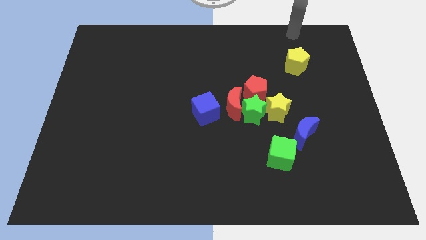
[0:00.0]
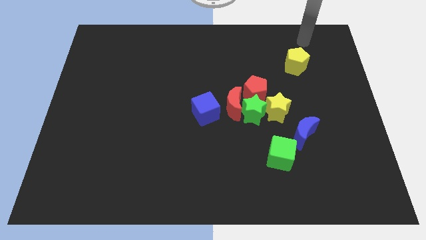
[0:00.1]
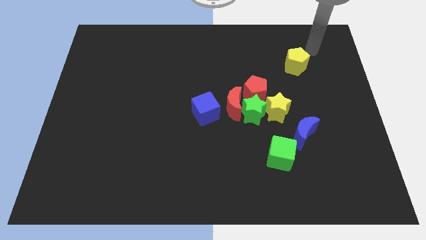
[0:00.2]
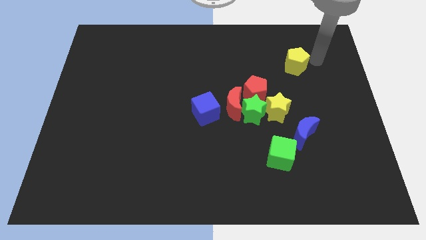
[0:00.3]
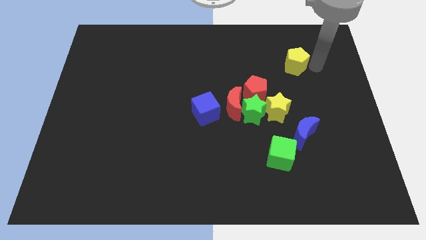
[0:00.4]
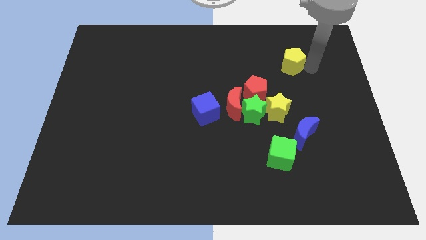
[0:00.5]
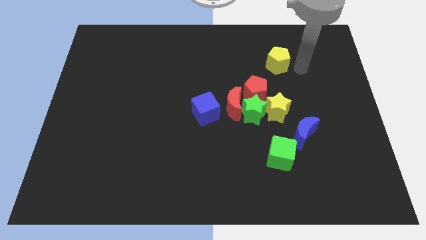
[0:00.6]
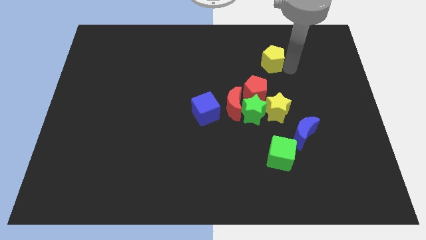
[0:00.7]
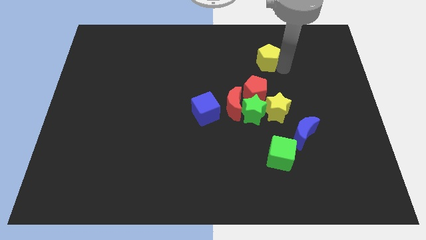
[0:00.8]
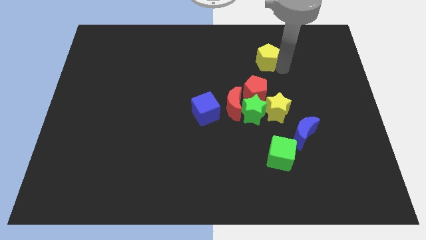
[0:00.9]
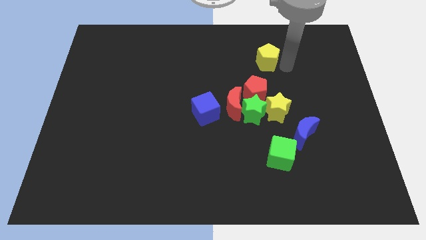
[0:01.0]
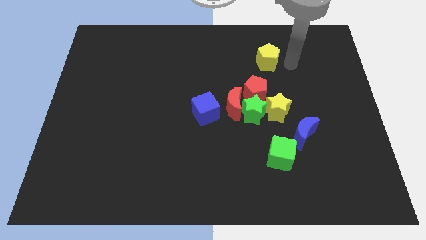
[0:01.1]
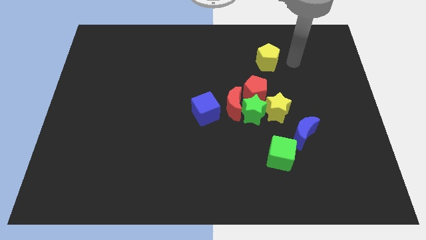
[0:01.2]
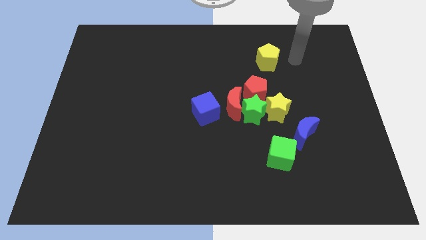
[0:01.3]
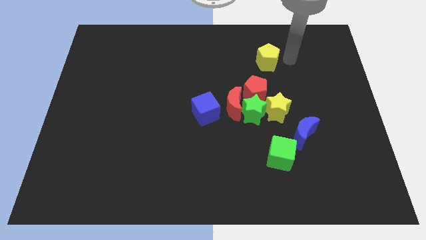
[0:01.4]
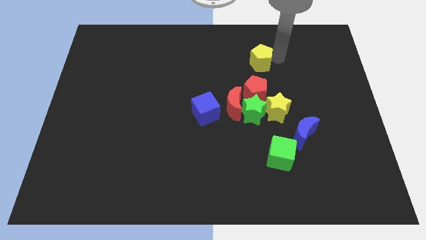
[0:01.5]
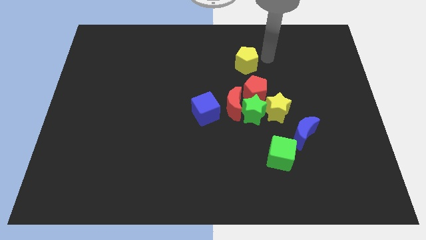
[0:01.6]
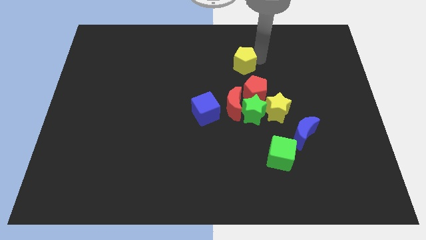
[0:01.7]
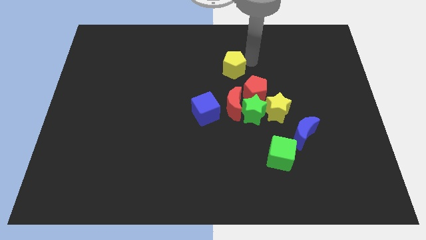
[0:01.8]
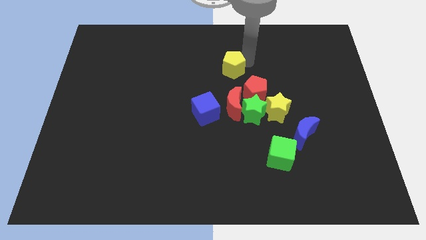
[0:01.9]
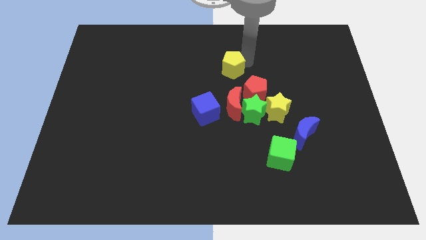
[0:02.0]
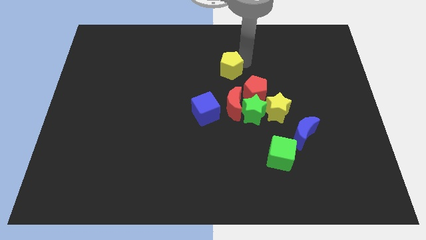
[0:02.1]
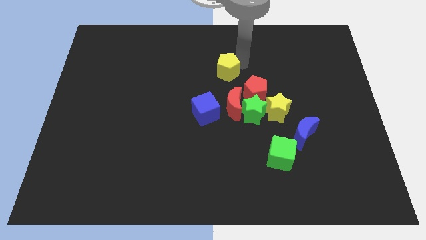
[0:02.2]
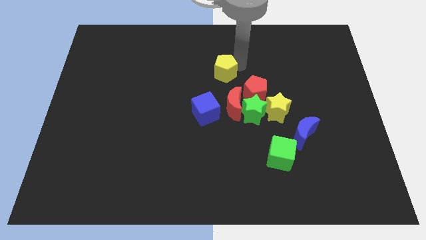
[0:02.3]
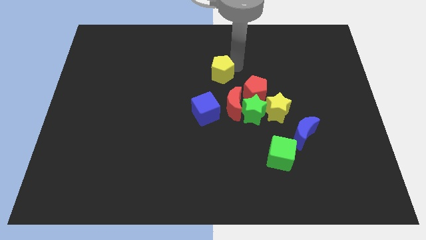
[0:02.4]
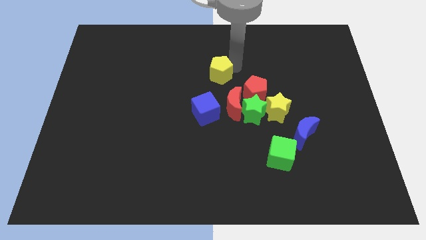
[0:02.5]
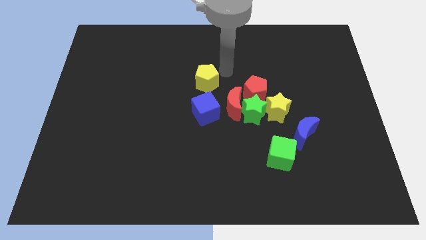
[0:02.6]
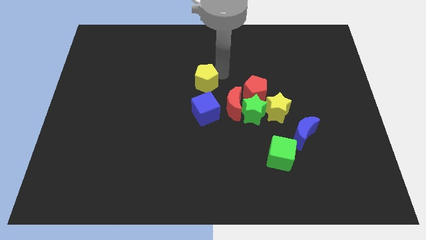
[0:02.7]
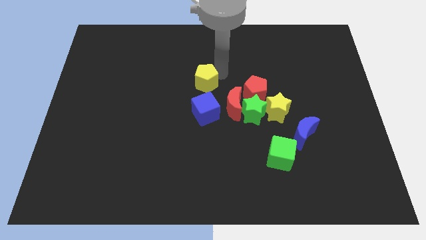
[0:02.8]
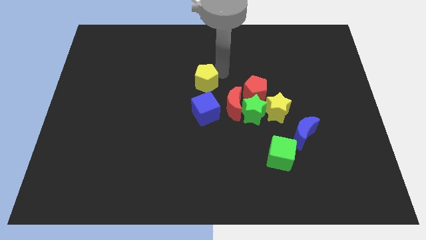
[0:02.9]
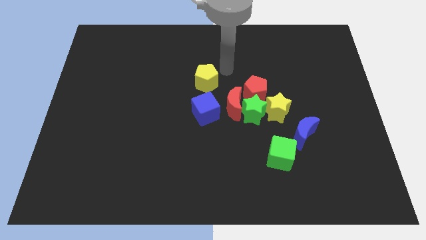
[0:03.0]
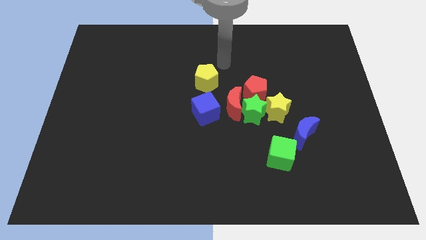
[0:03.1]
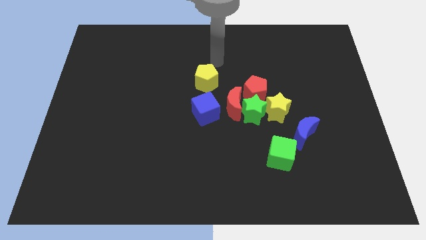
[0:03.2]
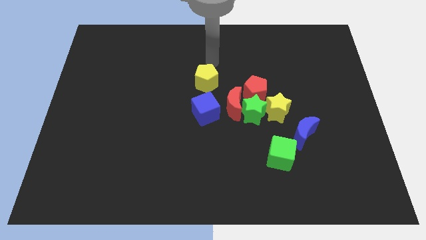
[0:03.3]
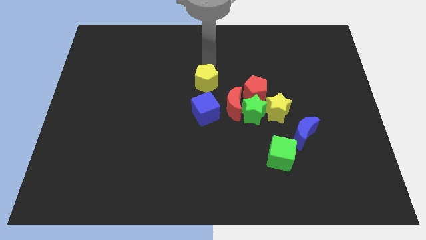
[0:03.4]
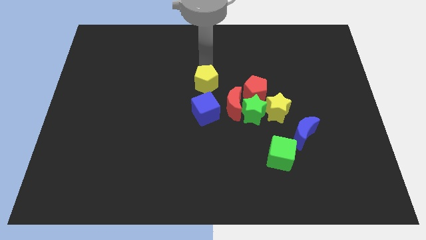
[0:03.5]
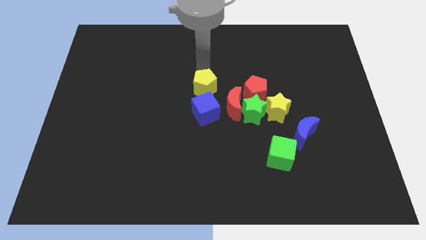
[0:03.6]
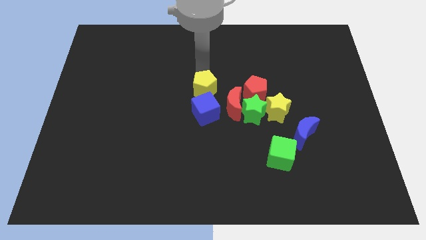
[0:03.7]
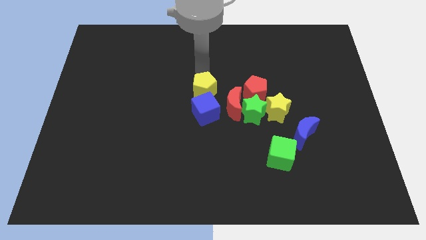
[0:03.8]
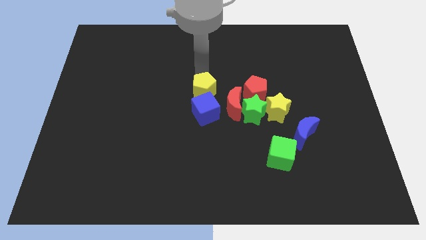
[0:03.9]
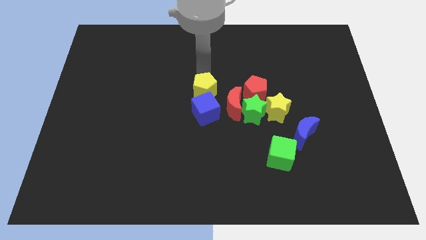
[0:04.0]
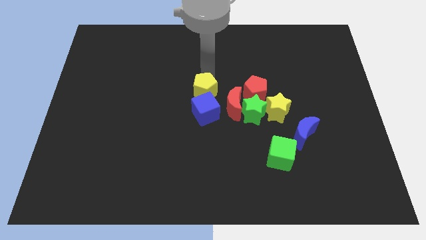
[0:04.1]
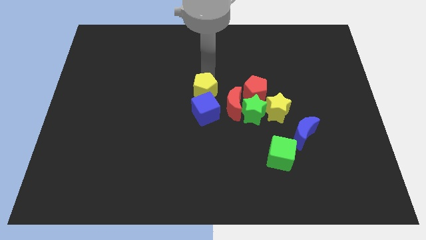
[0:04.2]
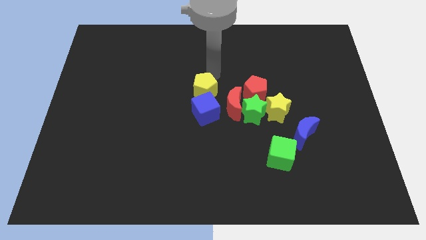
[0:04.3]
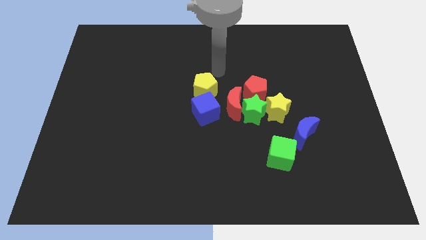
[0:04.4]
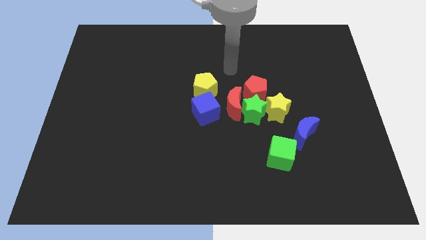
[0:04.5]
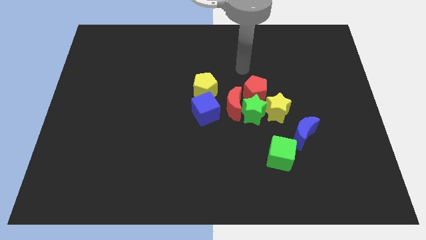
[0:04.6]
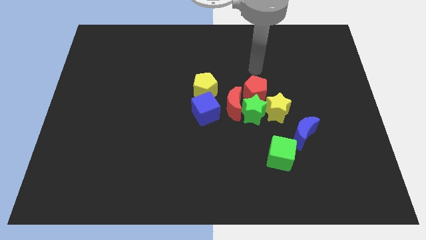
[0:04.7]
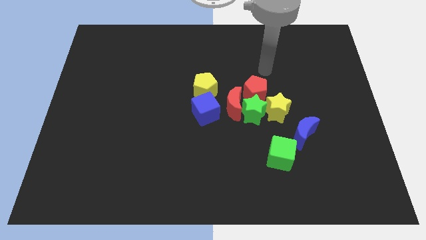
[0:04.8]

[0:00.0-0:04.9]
place the yellow pentagon above the blue cube

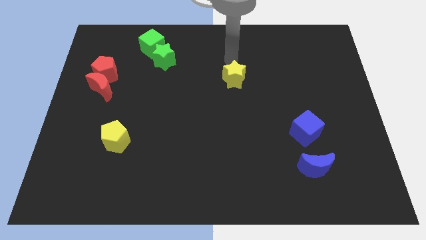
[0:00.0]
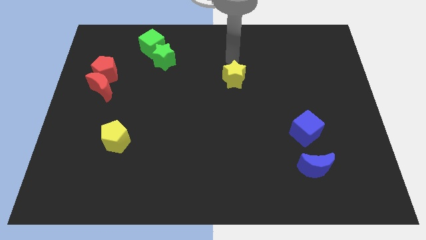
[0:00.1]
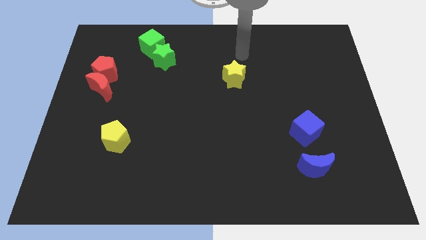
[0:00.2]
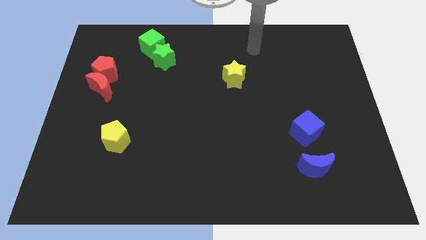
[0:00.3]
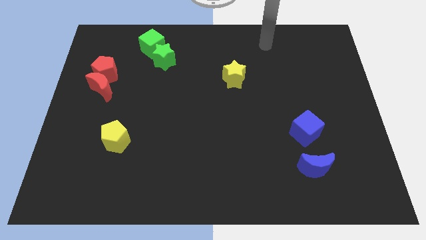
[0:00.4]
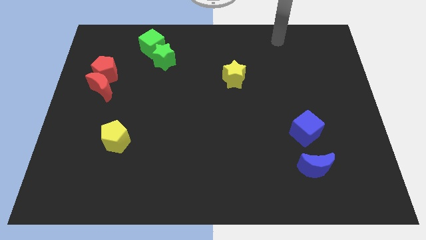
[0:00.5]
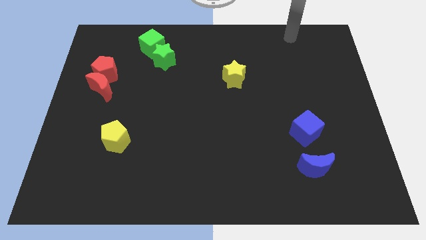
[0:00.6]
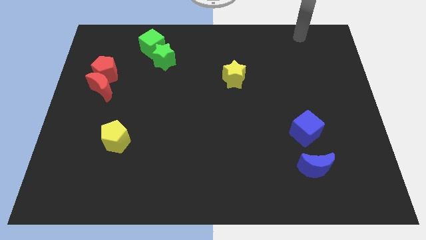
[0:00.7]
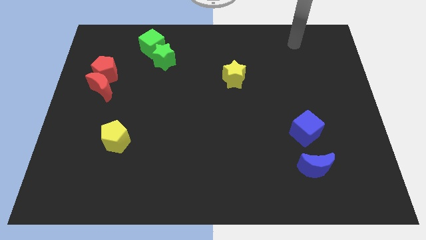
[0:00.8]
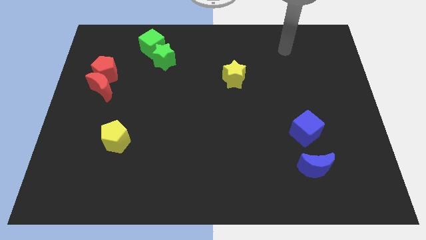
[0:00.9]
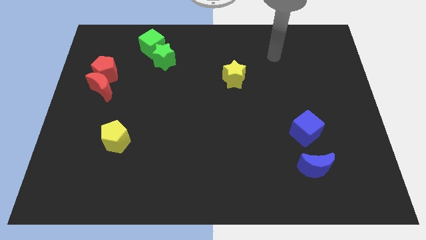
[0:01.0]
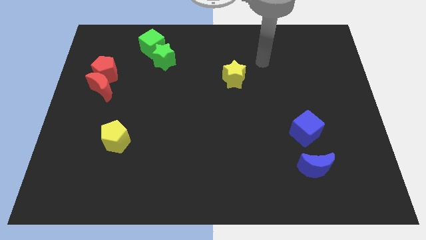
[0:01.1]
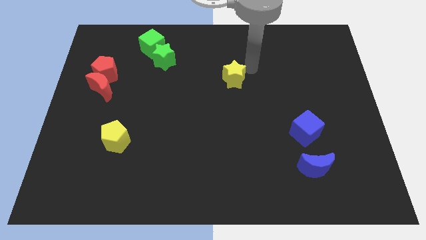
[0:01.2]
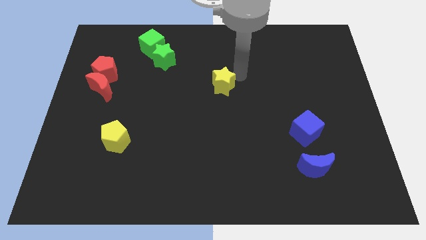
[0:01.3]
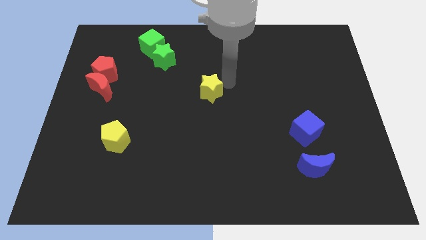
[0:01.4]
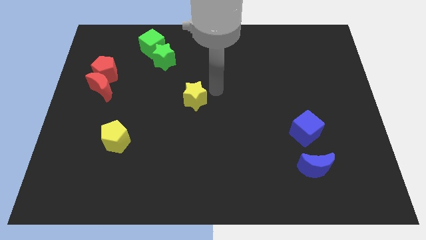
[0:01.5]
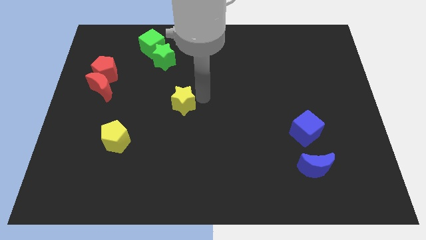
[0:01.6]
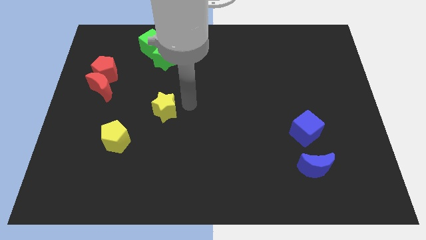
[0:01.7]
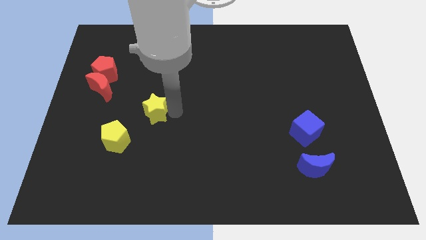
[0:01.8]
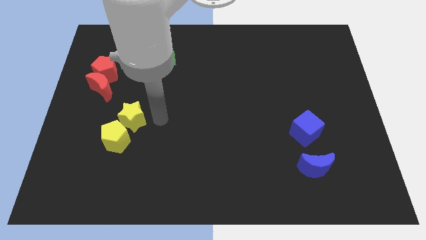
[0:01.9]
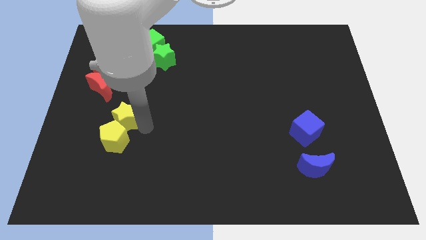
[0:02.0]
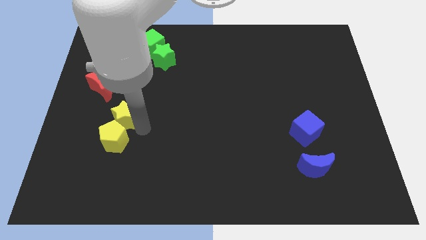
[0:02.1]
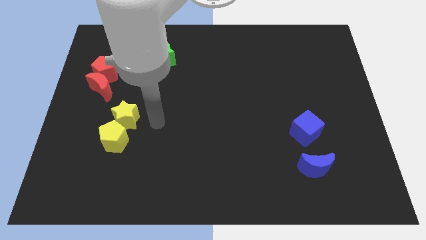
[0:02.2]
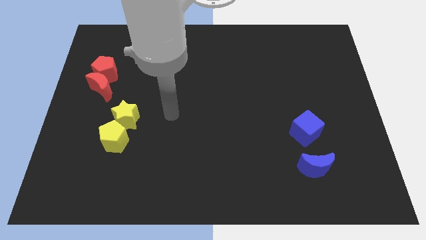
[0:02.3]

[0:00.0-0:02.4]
move the yellow star to the top of the yellow pentagon

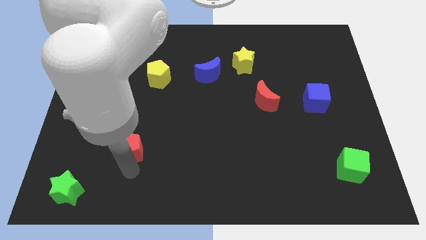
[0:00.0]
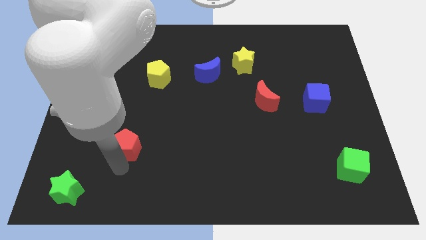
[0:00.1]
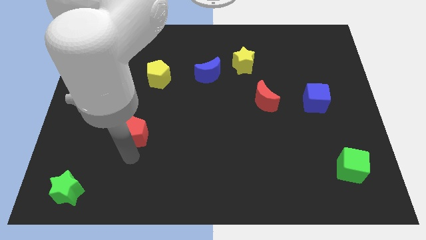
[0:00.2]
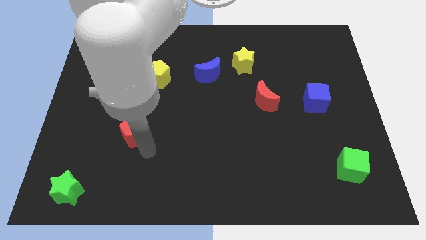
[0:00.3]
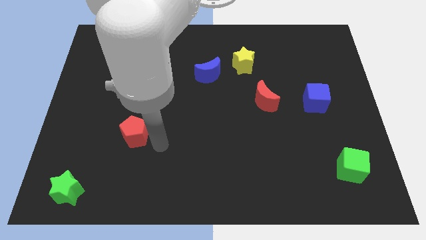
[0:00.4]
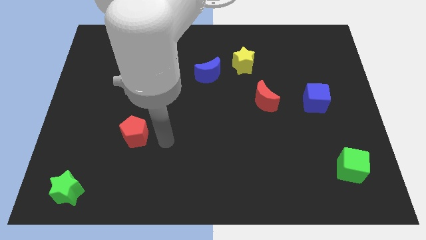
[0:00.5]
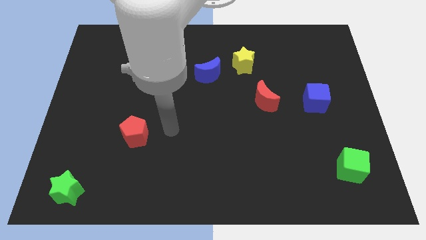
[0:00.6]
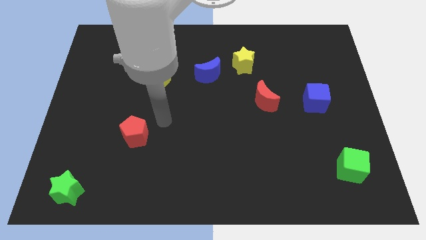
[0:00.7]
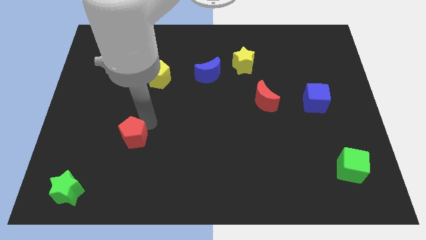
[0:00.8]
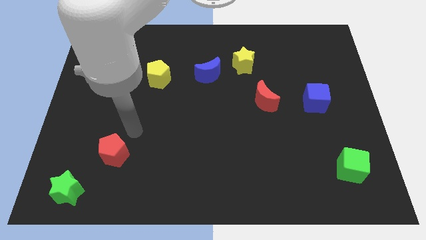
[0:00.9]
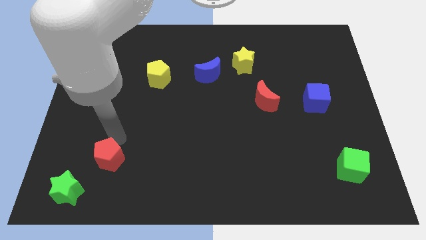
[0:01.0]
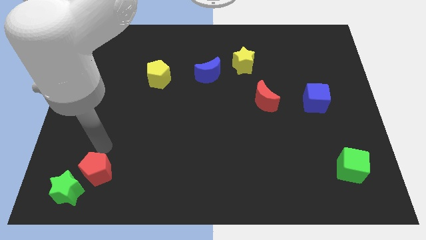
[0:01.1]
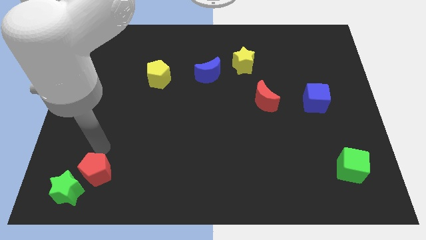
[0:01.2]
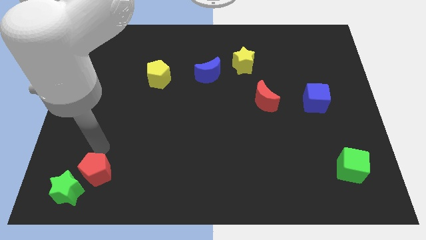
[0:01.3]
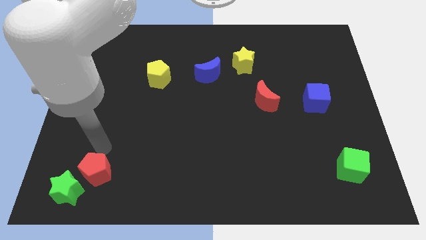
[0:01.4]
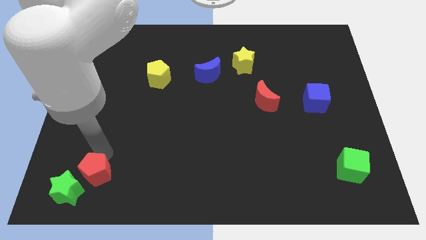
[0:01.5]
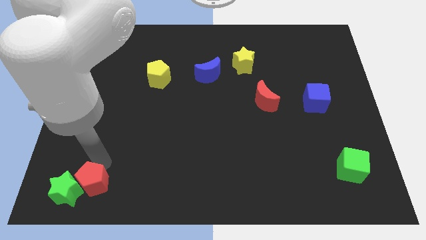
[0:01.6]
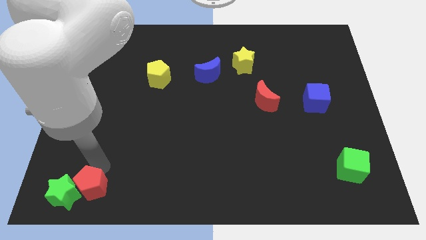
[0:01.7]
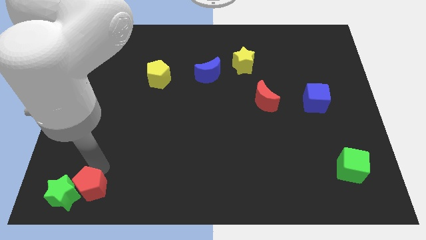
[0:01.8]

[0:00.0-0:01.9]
push the red pentagon into the green star

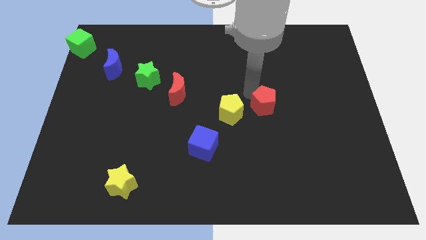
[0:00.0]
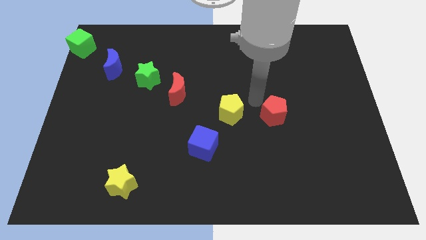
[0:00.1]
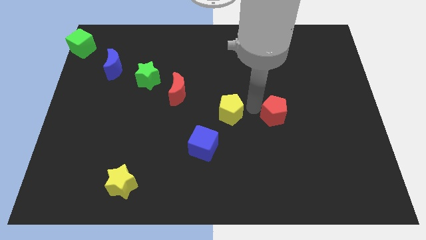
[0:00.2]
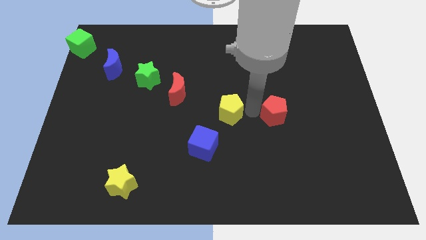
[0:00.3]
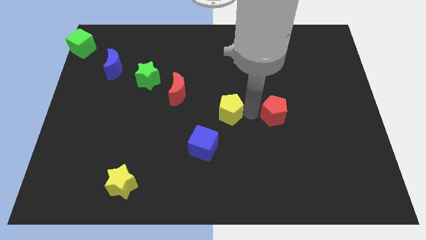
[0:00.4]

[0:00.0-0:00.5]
push red pentagon slightly below yellow pentagon
